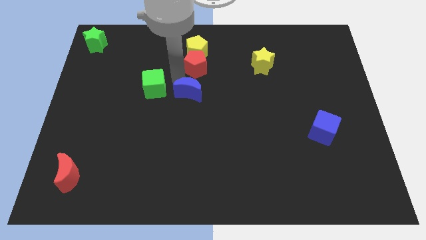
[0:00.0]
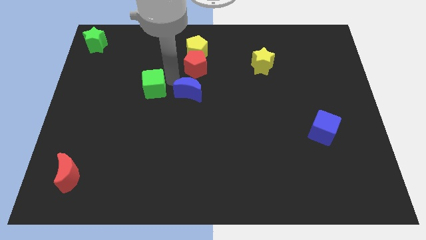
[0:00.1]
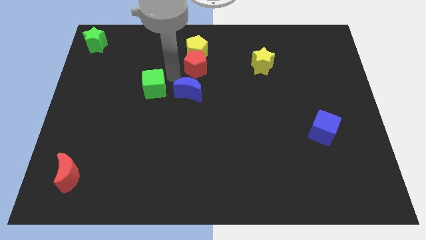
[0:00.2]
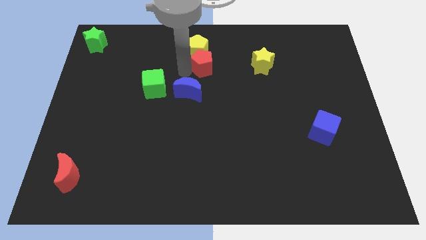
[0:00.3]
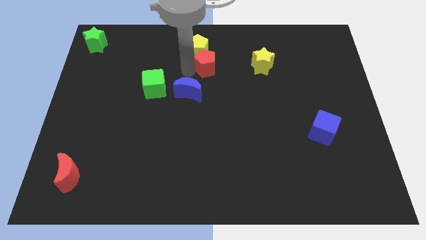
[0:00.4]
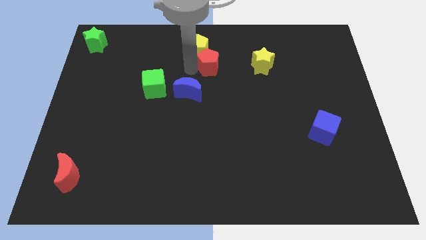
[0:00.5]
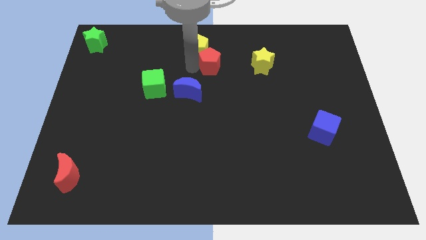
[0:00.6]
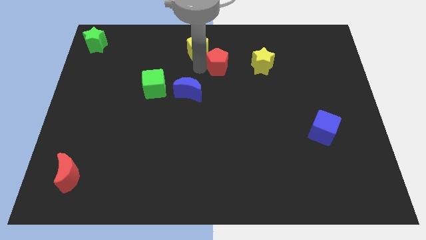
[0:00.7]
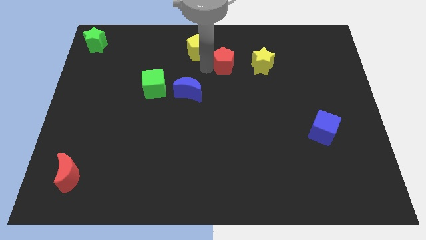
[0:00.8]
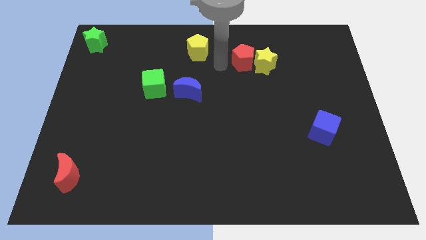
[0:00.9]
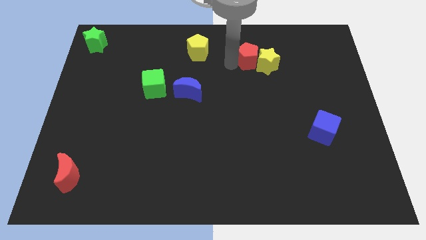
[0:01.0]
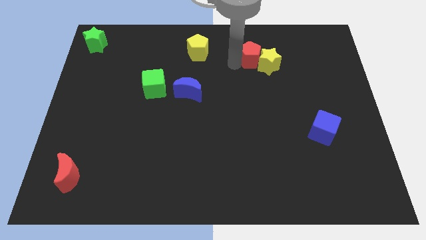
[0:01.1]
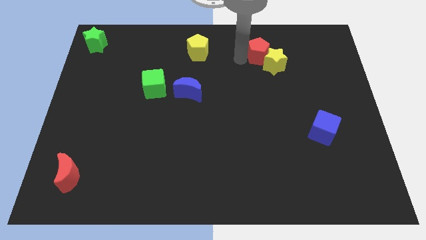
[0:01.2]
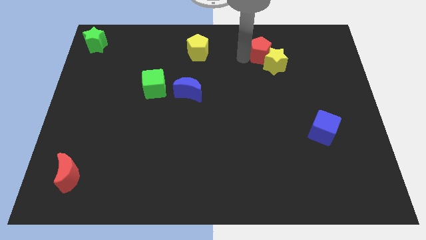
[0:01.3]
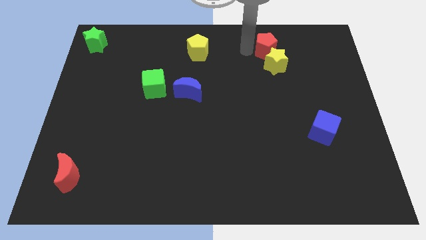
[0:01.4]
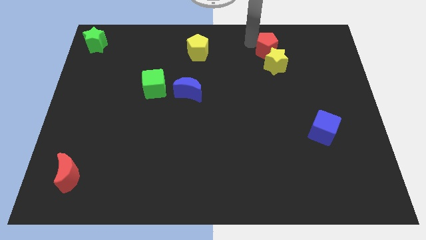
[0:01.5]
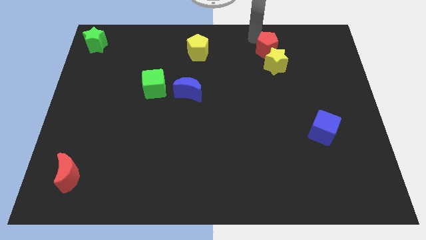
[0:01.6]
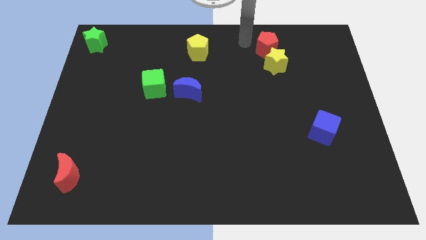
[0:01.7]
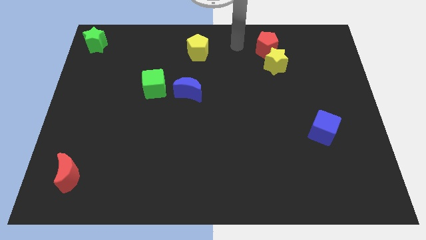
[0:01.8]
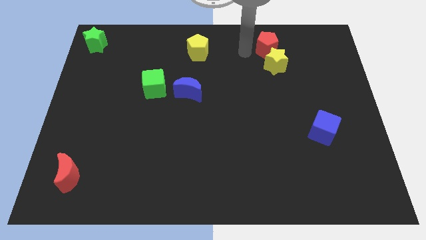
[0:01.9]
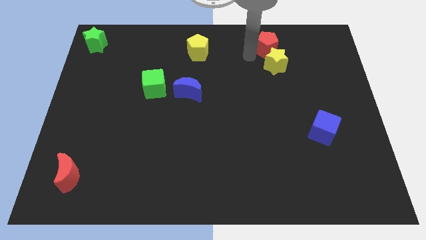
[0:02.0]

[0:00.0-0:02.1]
move the red pentagon above the yellow star

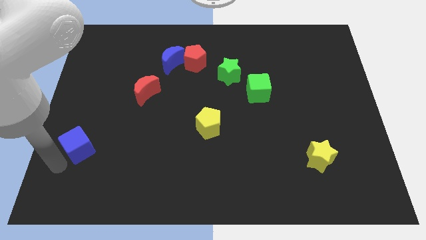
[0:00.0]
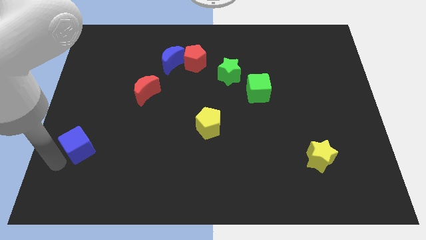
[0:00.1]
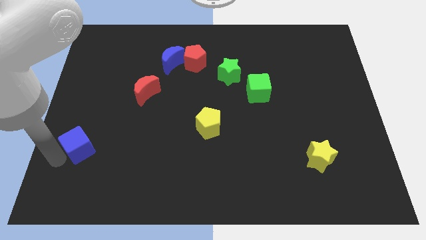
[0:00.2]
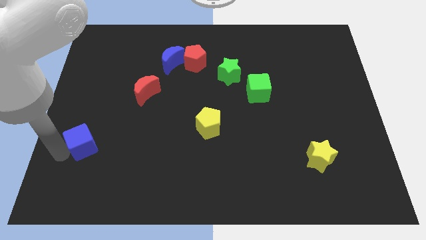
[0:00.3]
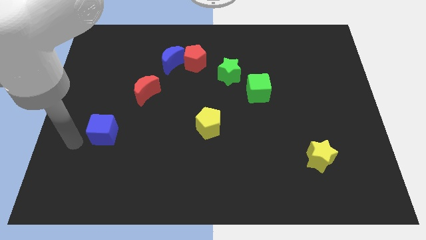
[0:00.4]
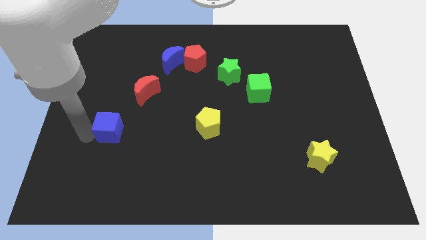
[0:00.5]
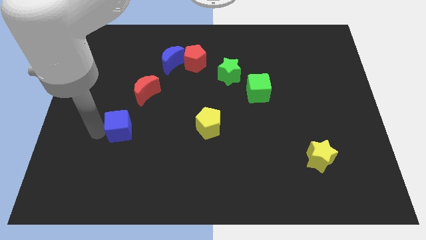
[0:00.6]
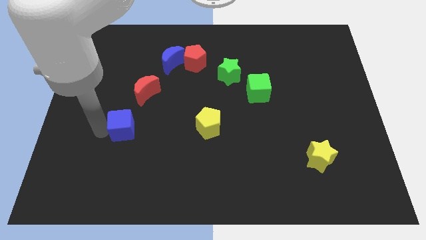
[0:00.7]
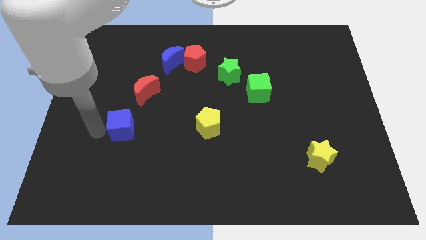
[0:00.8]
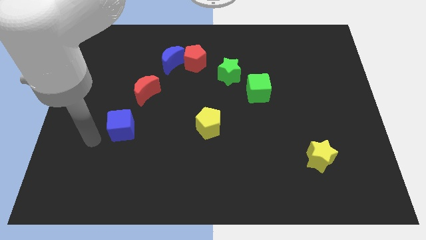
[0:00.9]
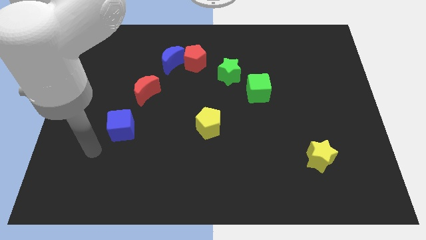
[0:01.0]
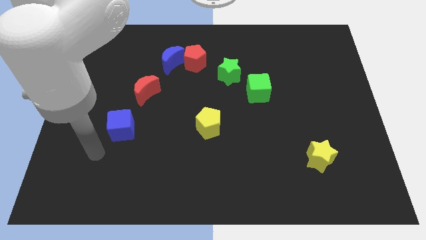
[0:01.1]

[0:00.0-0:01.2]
place the blue parallel to the yellow pentagon

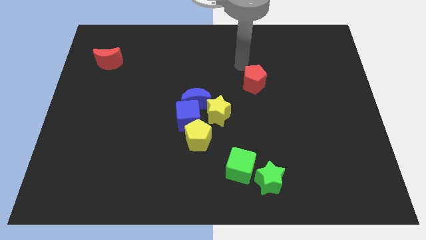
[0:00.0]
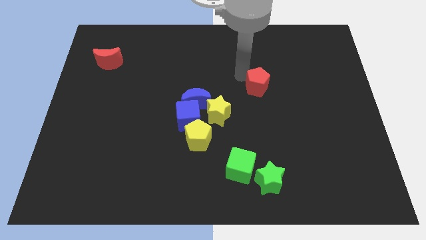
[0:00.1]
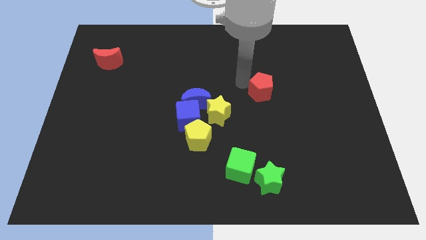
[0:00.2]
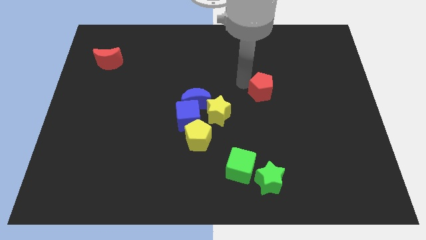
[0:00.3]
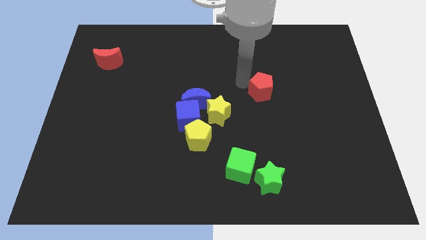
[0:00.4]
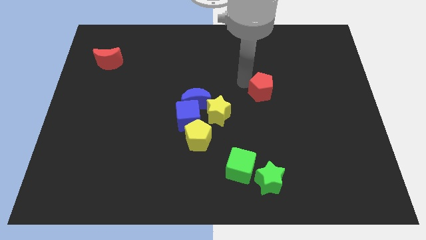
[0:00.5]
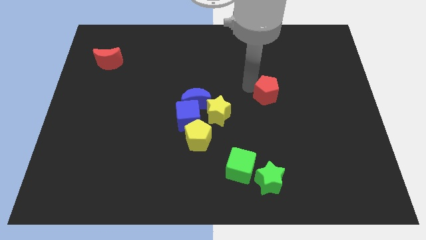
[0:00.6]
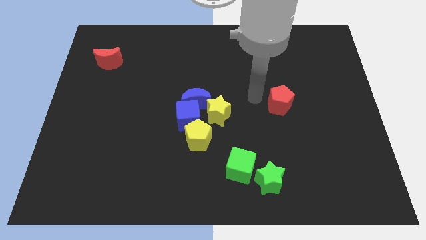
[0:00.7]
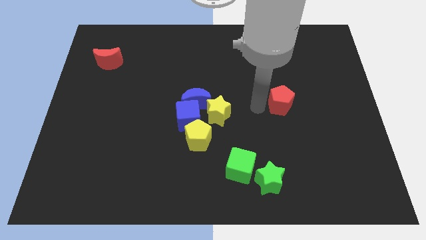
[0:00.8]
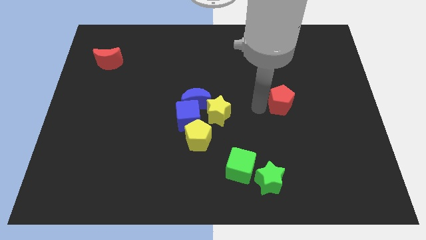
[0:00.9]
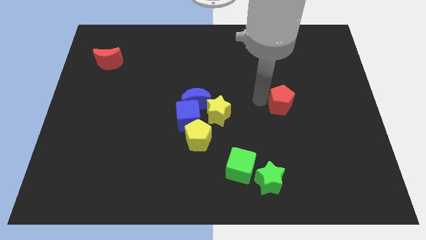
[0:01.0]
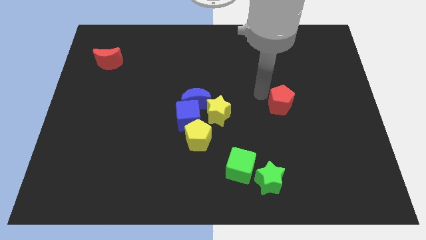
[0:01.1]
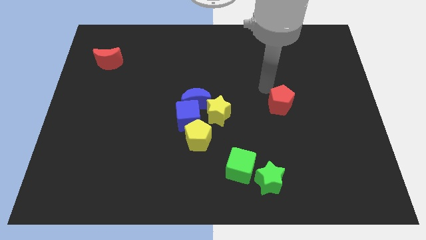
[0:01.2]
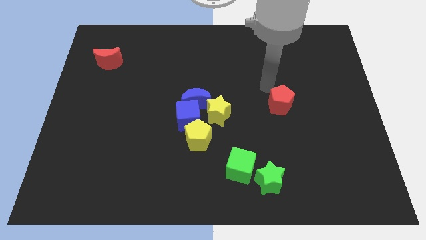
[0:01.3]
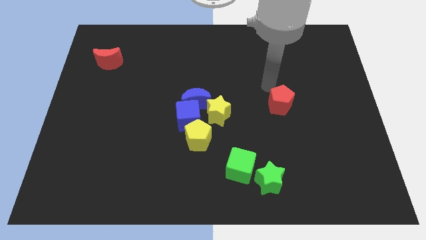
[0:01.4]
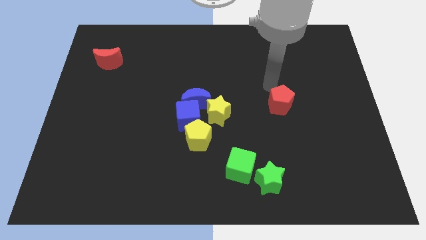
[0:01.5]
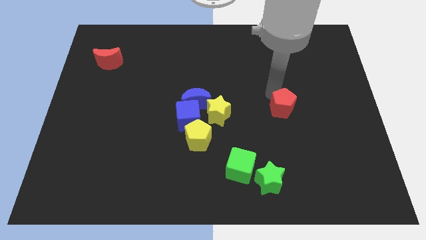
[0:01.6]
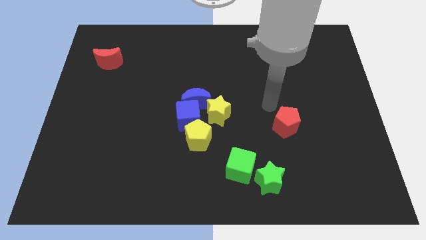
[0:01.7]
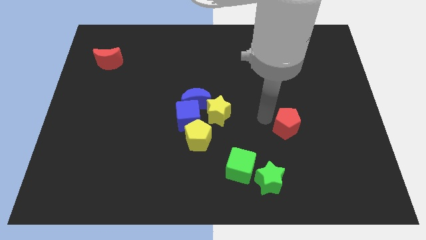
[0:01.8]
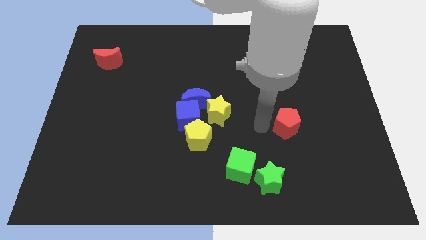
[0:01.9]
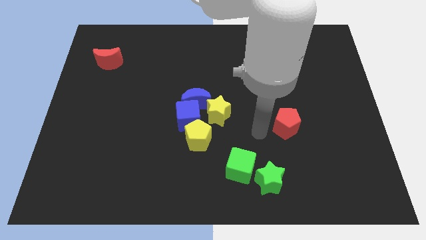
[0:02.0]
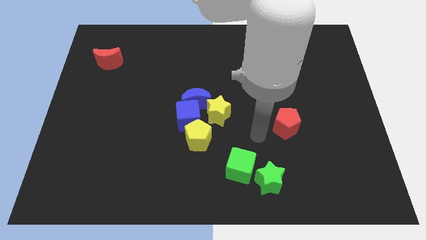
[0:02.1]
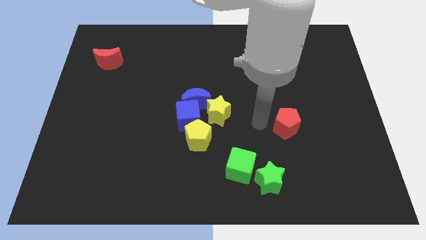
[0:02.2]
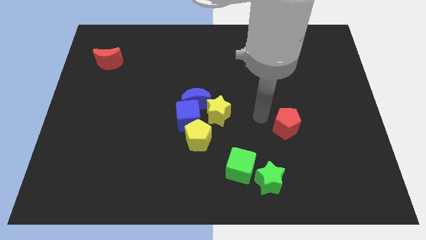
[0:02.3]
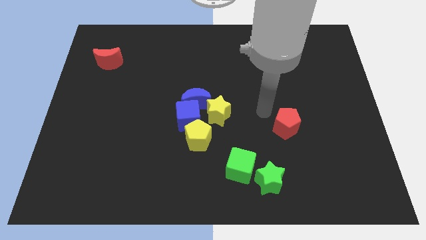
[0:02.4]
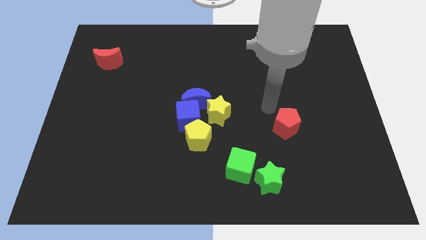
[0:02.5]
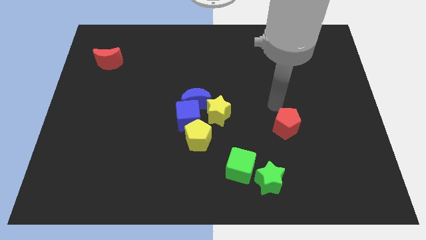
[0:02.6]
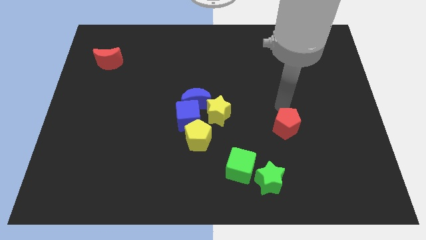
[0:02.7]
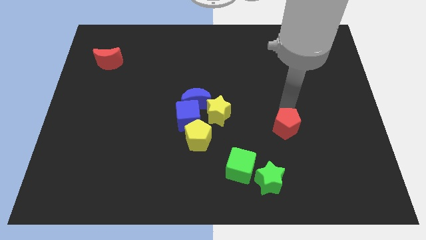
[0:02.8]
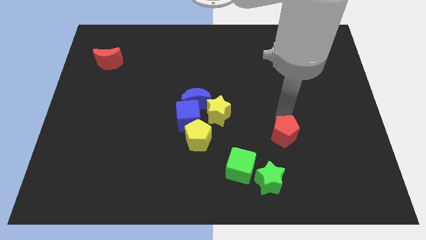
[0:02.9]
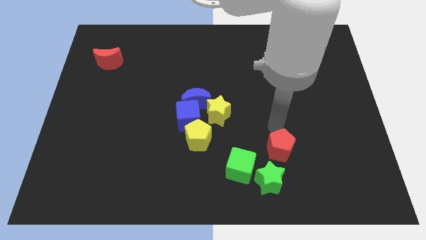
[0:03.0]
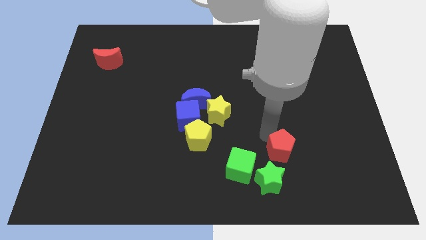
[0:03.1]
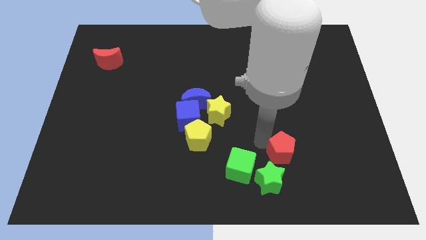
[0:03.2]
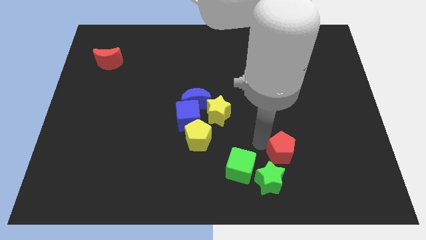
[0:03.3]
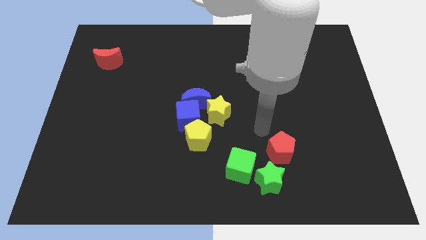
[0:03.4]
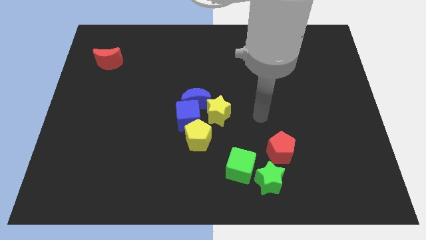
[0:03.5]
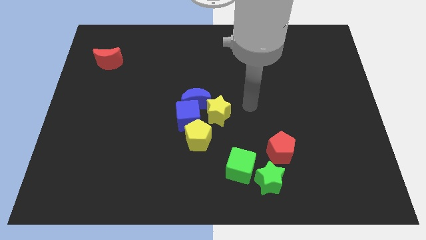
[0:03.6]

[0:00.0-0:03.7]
slide the red pentagon towards the green star

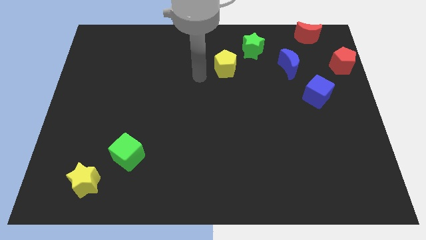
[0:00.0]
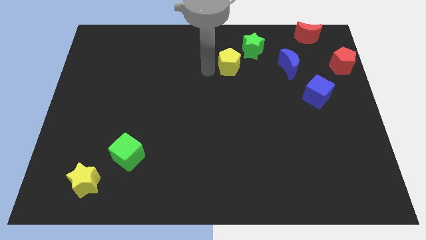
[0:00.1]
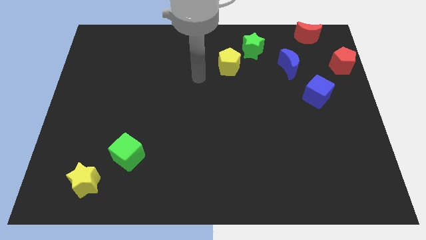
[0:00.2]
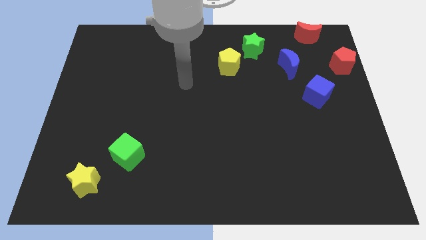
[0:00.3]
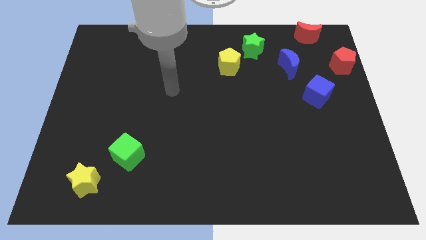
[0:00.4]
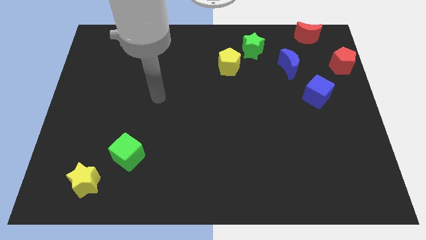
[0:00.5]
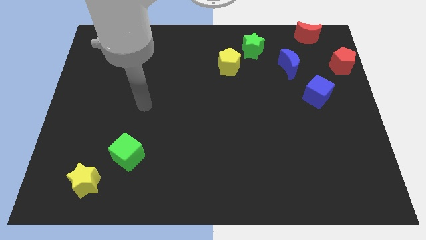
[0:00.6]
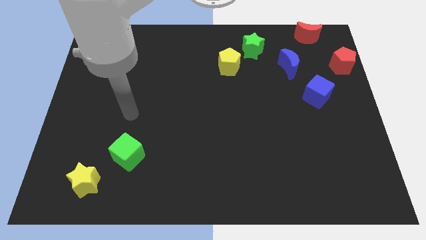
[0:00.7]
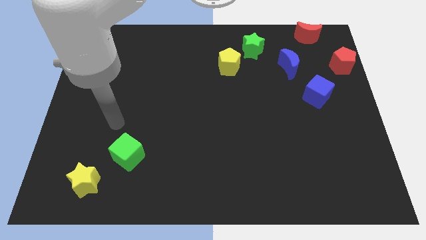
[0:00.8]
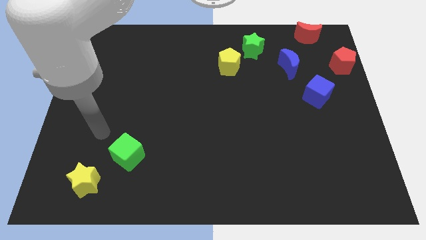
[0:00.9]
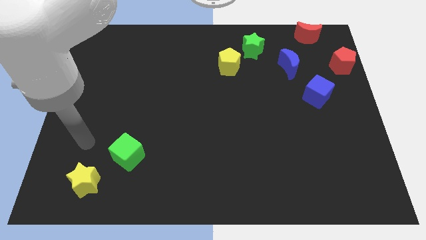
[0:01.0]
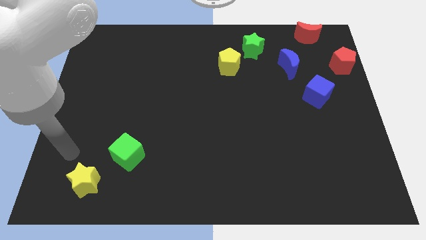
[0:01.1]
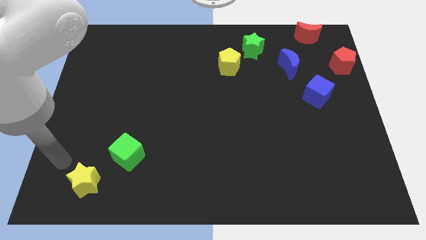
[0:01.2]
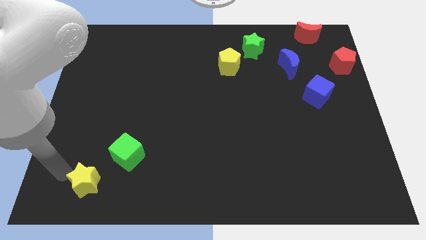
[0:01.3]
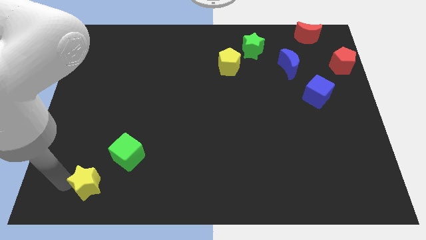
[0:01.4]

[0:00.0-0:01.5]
move your arm away from the yellow pentagon

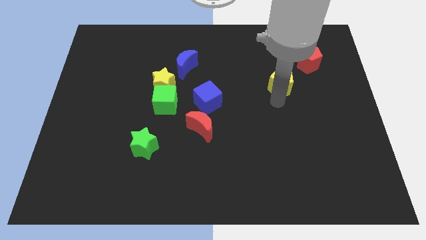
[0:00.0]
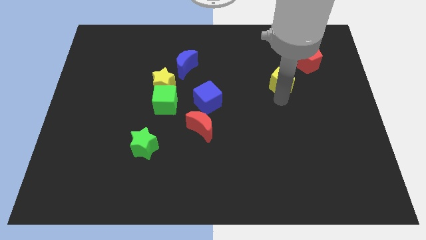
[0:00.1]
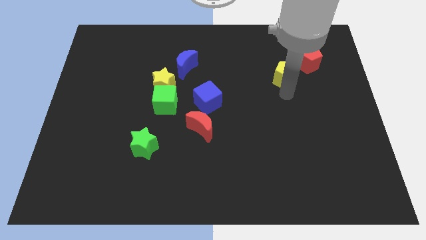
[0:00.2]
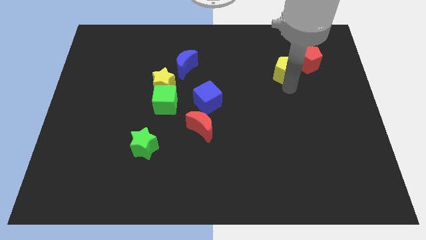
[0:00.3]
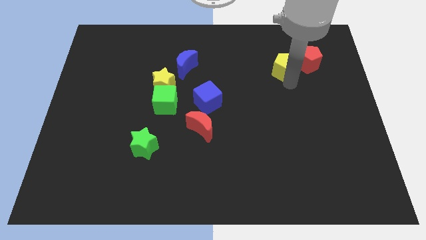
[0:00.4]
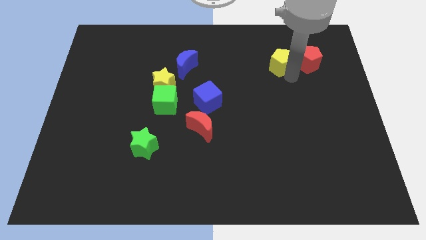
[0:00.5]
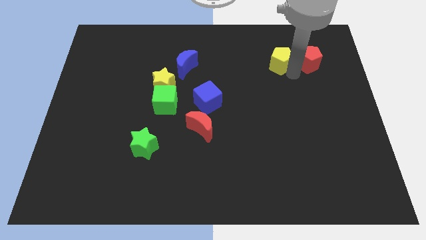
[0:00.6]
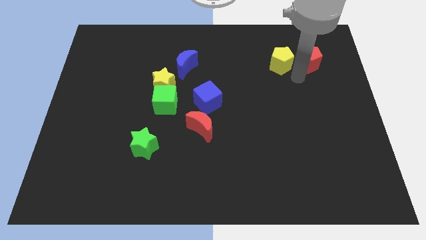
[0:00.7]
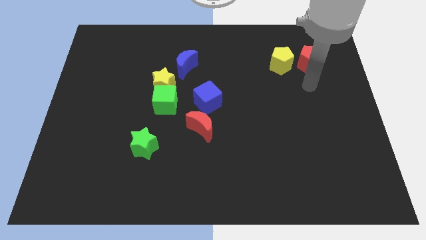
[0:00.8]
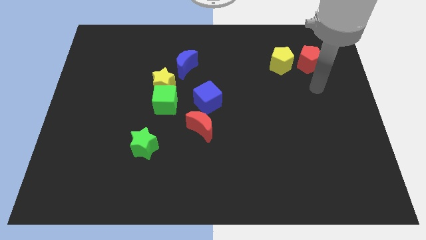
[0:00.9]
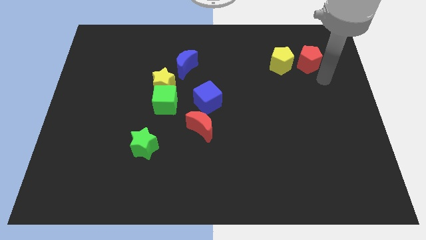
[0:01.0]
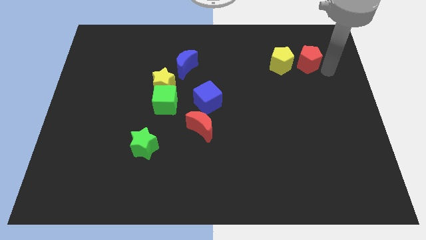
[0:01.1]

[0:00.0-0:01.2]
place the yellow pentagon to the left side of the red pentagon
